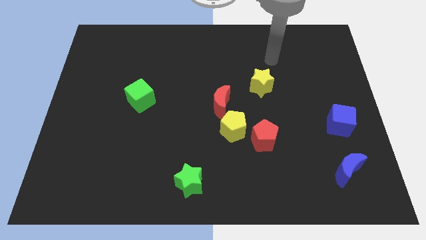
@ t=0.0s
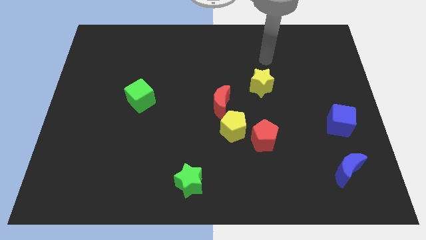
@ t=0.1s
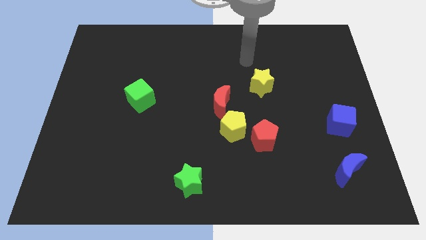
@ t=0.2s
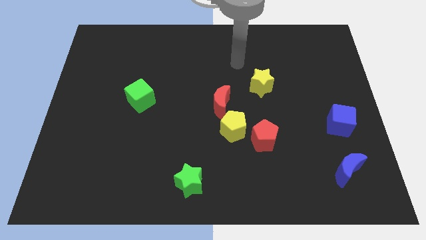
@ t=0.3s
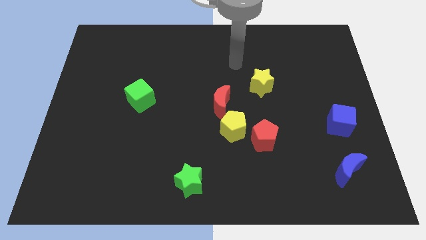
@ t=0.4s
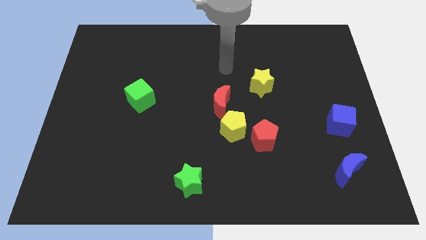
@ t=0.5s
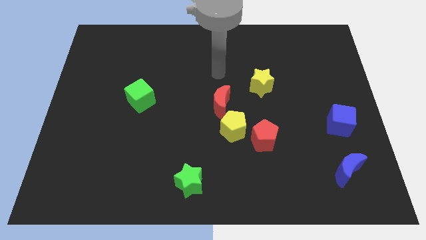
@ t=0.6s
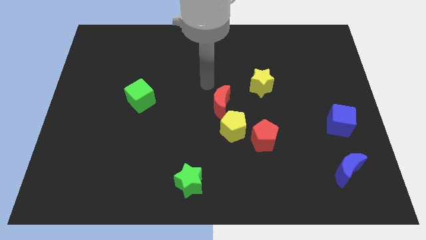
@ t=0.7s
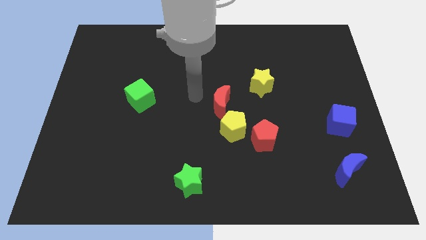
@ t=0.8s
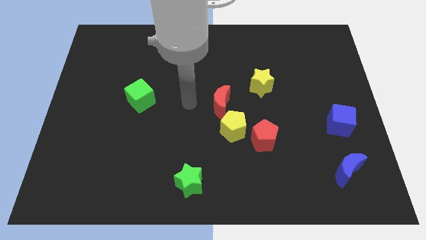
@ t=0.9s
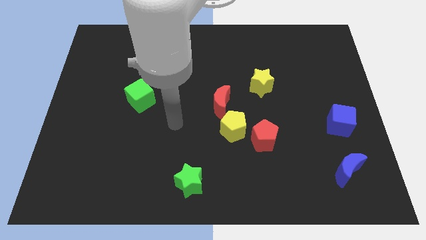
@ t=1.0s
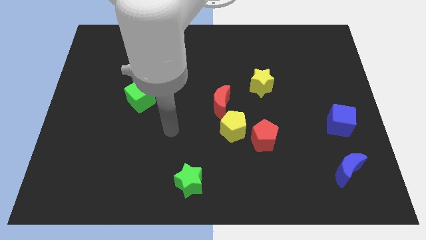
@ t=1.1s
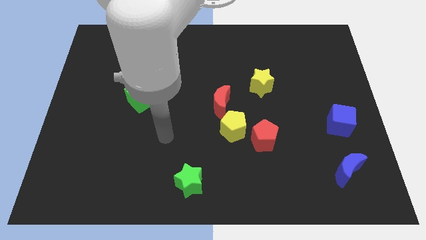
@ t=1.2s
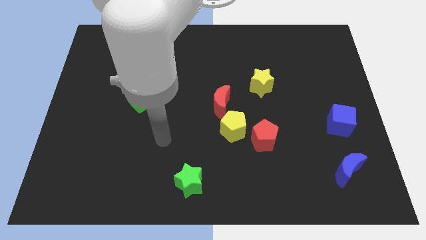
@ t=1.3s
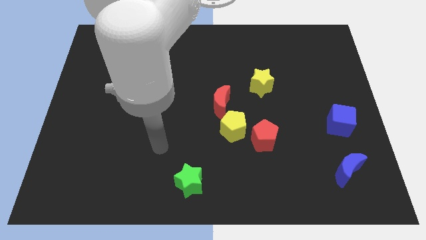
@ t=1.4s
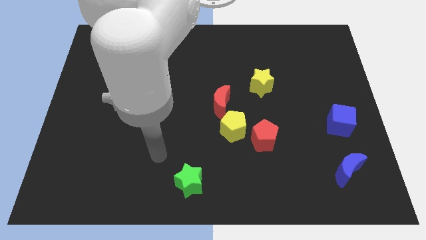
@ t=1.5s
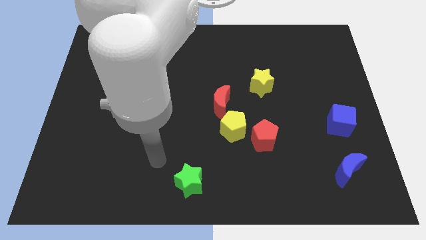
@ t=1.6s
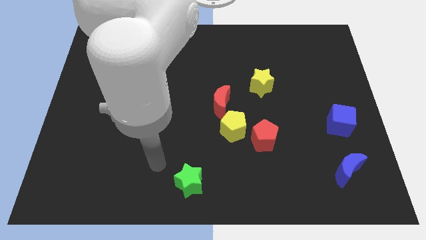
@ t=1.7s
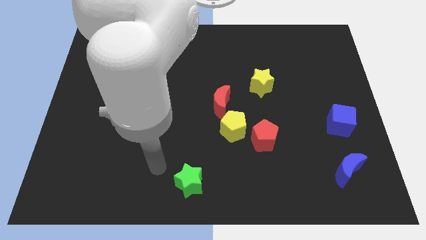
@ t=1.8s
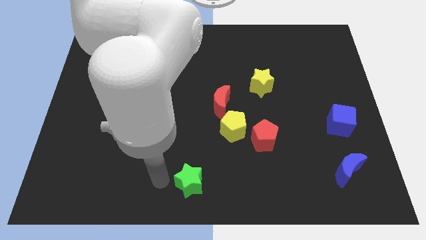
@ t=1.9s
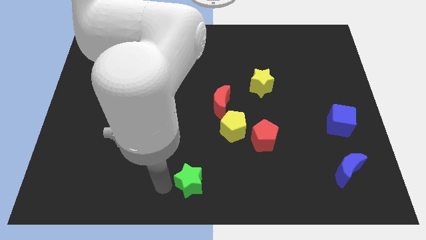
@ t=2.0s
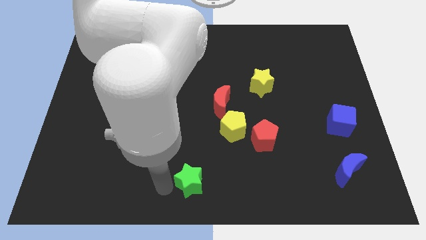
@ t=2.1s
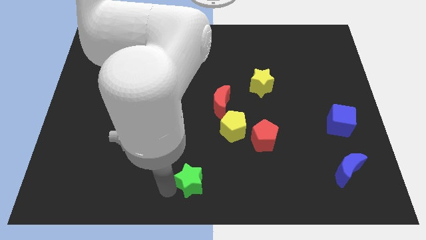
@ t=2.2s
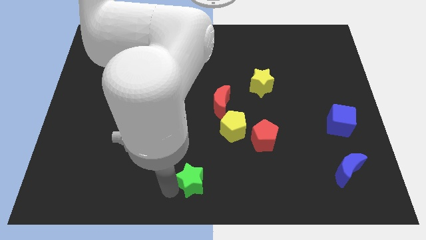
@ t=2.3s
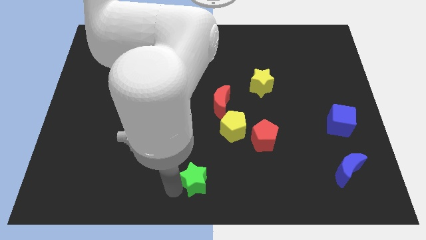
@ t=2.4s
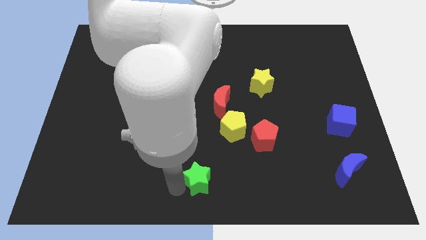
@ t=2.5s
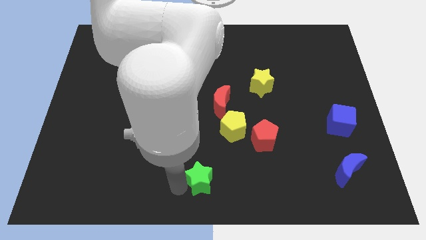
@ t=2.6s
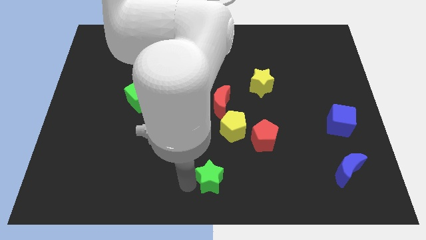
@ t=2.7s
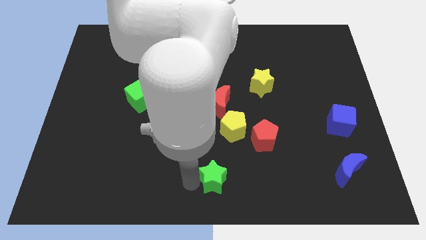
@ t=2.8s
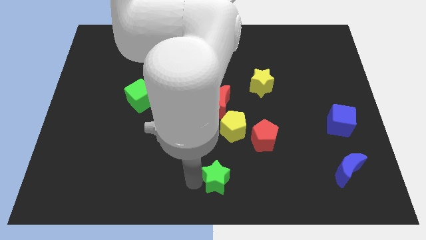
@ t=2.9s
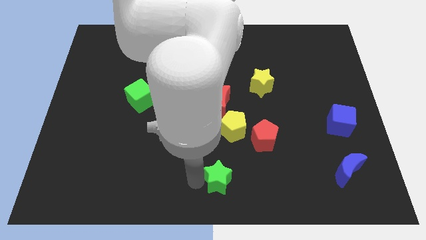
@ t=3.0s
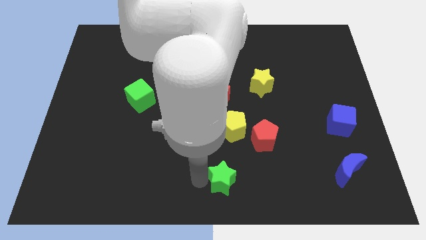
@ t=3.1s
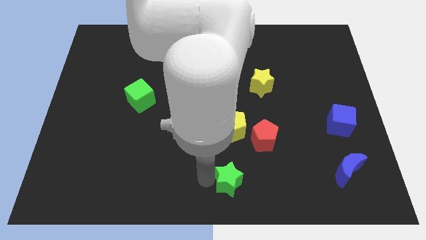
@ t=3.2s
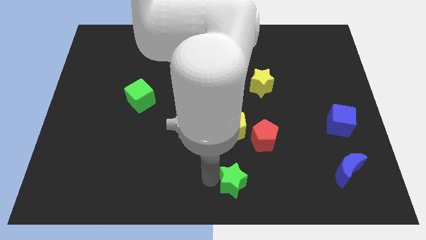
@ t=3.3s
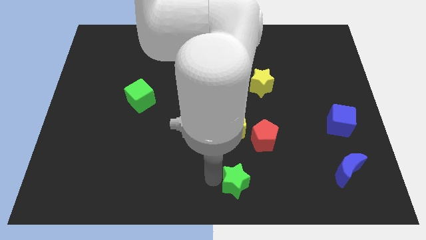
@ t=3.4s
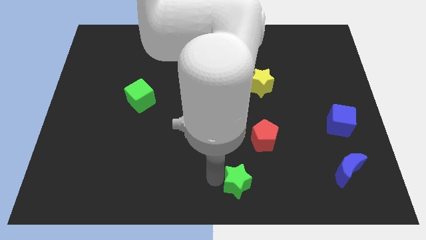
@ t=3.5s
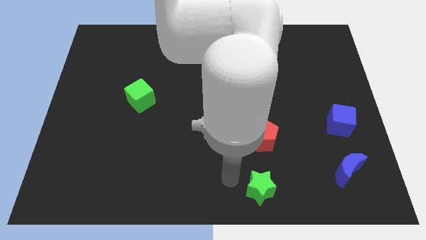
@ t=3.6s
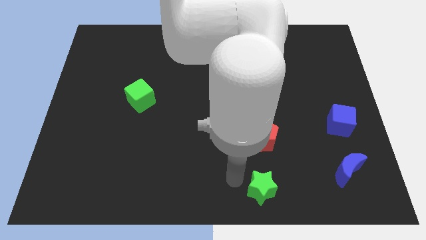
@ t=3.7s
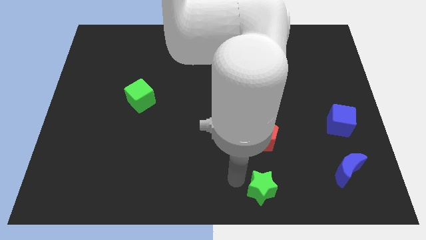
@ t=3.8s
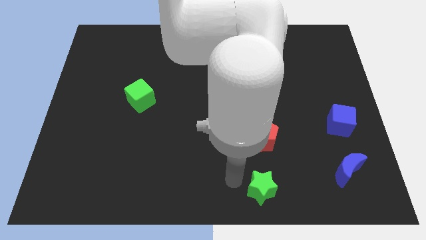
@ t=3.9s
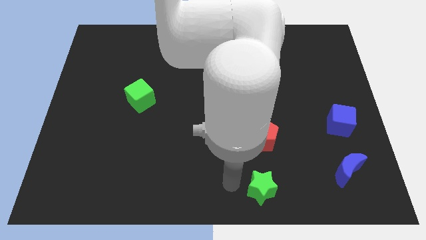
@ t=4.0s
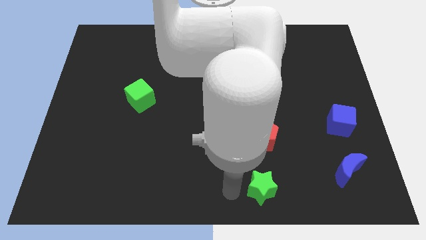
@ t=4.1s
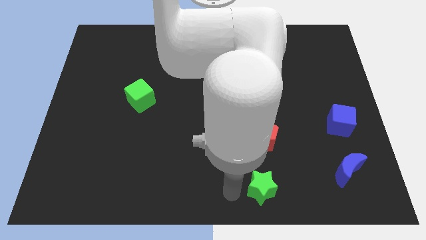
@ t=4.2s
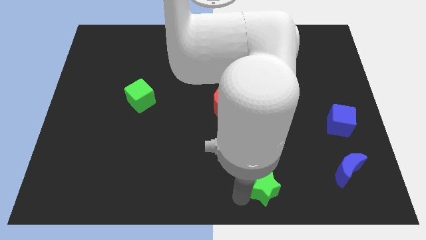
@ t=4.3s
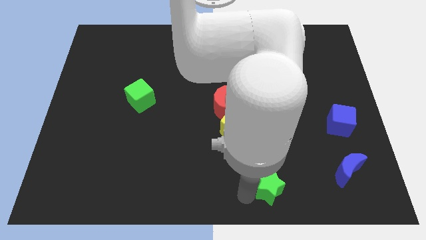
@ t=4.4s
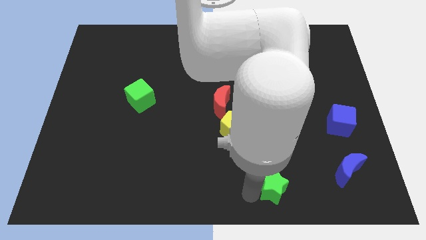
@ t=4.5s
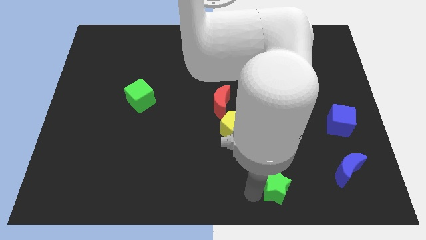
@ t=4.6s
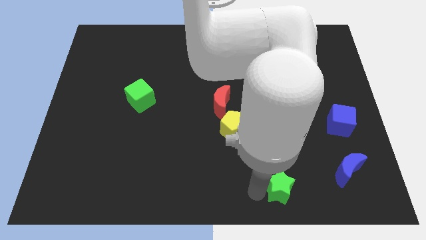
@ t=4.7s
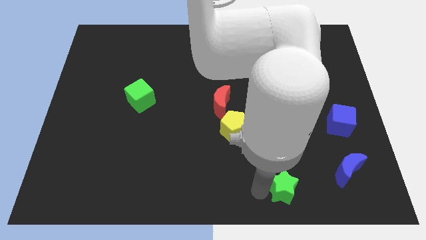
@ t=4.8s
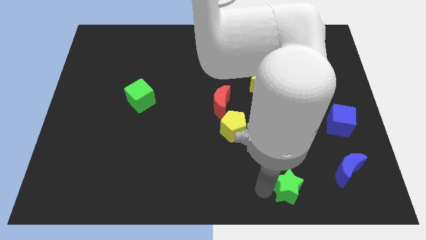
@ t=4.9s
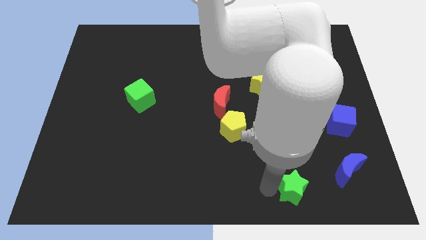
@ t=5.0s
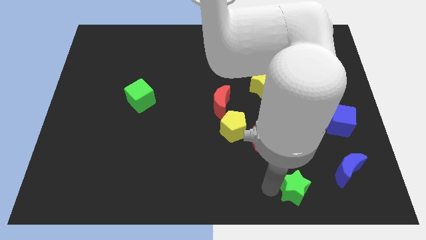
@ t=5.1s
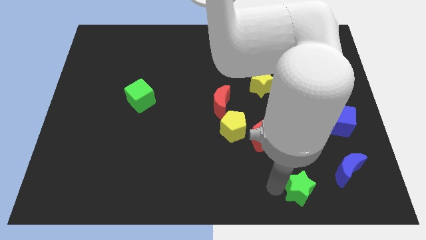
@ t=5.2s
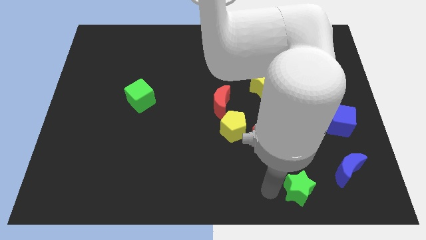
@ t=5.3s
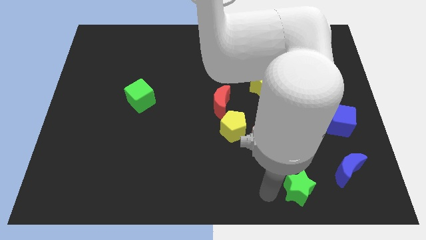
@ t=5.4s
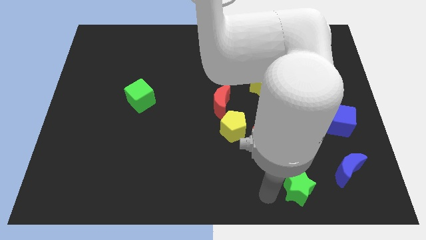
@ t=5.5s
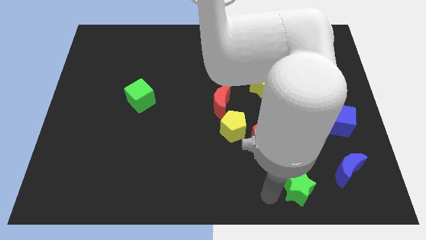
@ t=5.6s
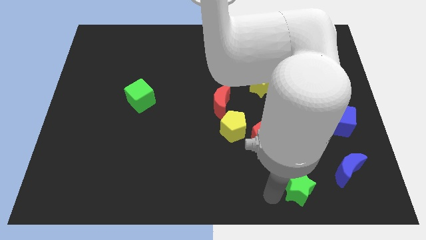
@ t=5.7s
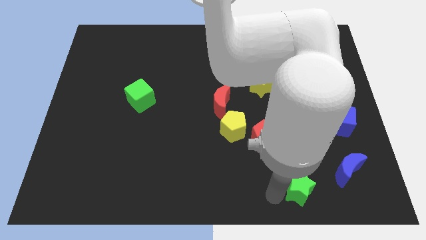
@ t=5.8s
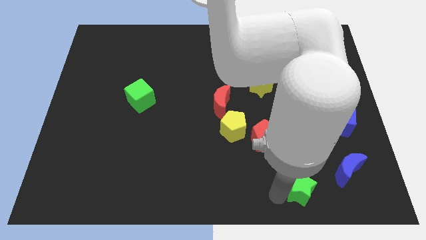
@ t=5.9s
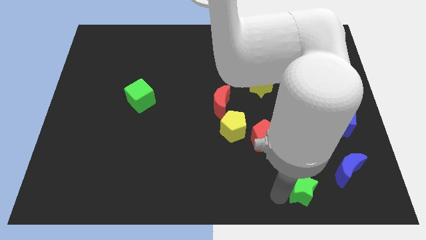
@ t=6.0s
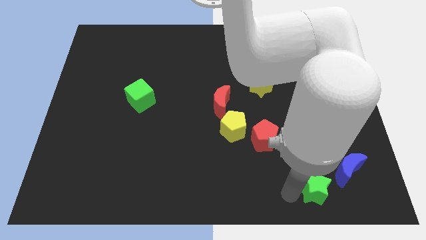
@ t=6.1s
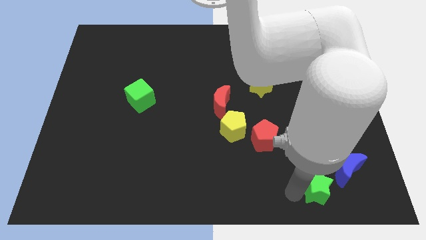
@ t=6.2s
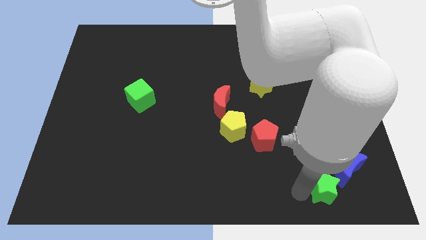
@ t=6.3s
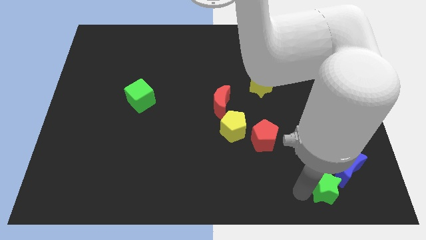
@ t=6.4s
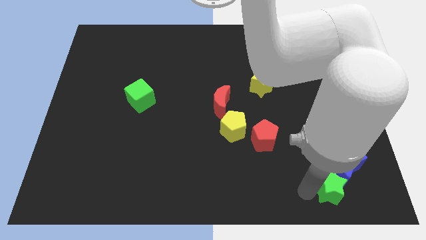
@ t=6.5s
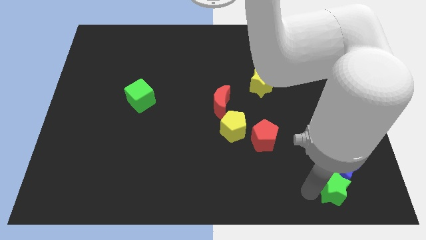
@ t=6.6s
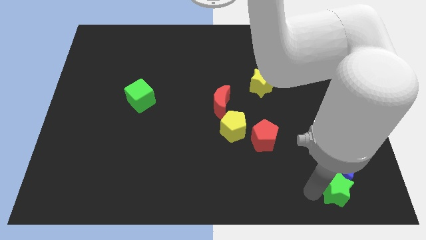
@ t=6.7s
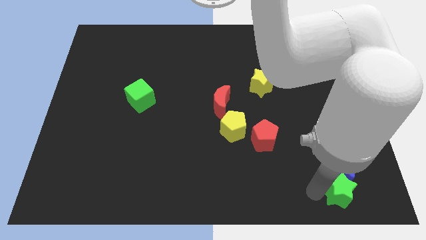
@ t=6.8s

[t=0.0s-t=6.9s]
slide the green star next to the blue moon

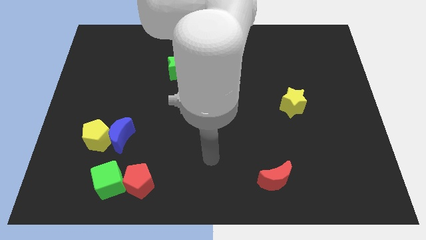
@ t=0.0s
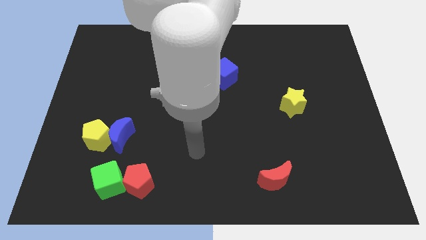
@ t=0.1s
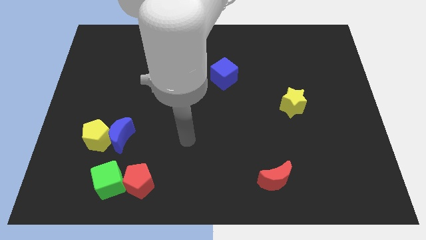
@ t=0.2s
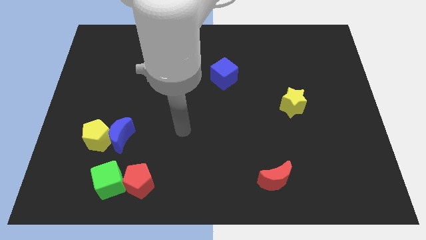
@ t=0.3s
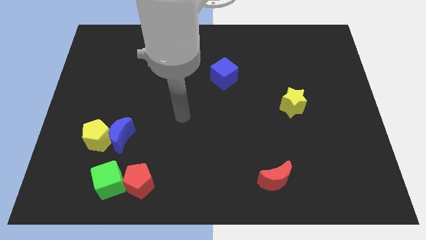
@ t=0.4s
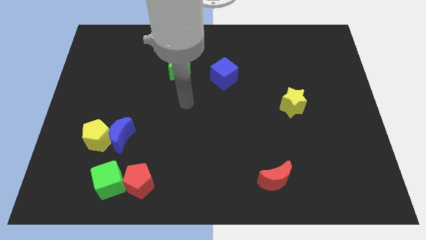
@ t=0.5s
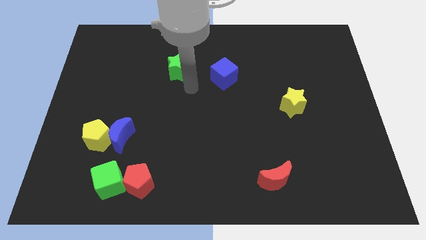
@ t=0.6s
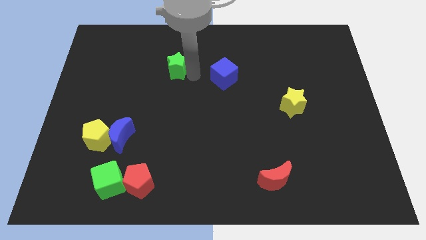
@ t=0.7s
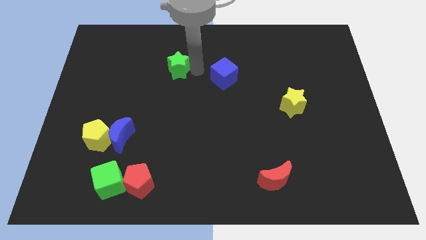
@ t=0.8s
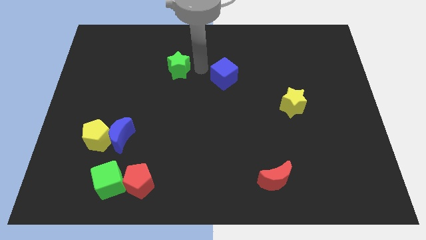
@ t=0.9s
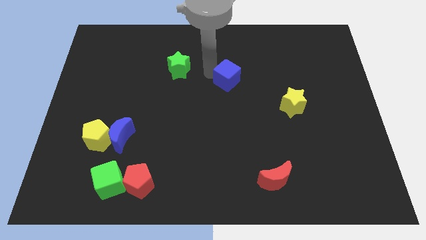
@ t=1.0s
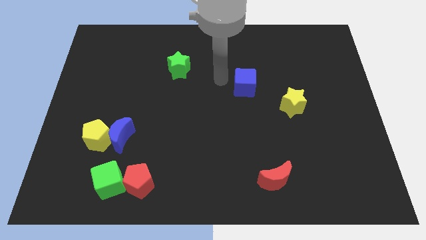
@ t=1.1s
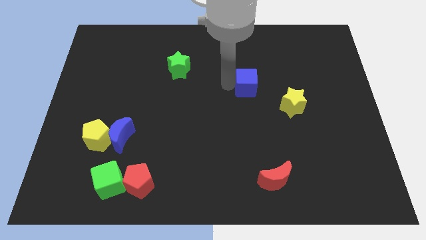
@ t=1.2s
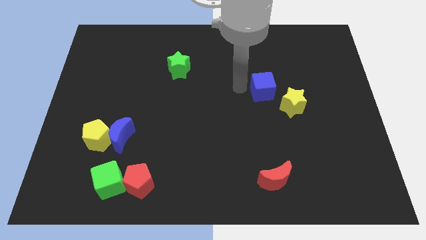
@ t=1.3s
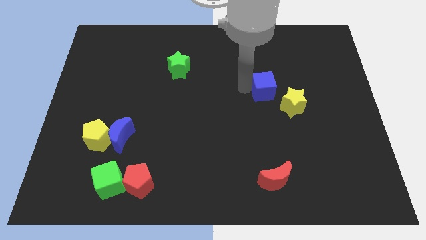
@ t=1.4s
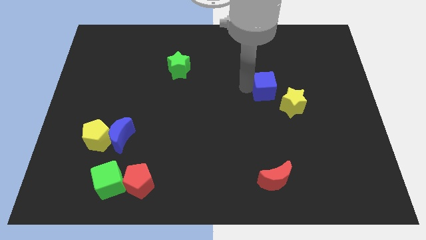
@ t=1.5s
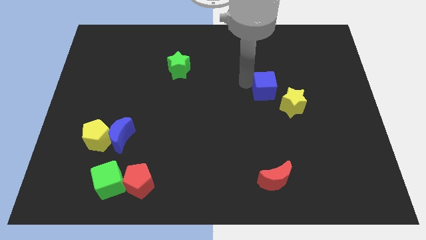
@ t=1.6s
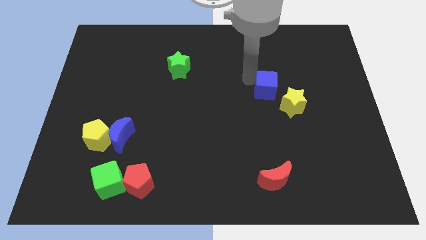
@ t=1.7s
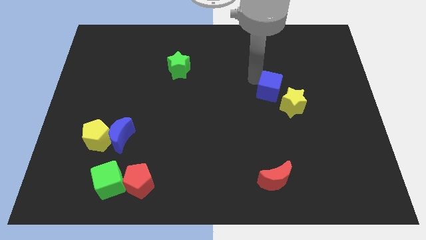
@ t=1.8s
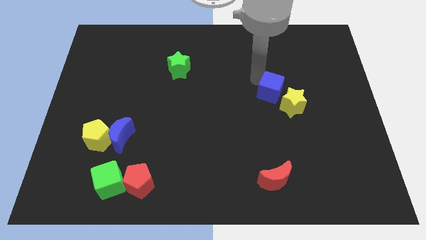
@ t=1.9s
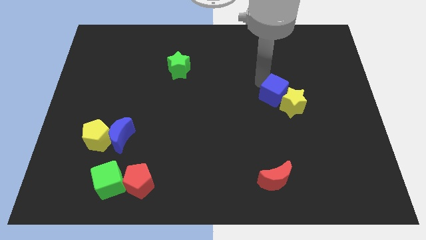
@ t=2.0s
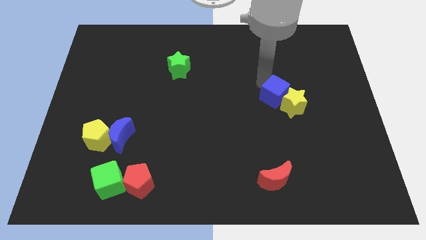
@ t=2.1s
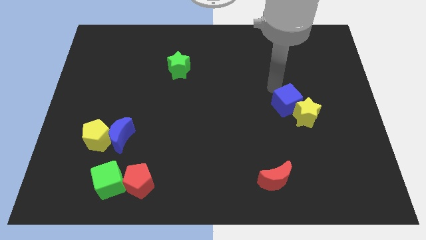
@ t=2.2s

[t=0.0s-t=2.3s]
push the blue cube next to the yellow star
